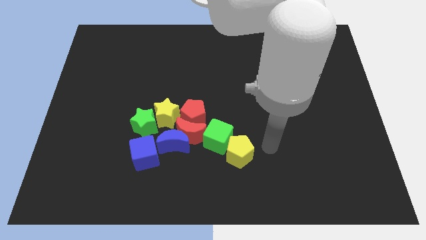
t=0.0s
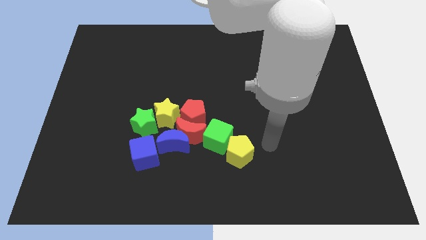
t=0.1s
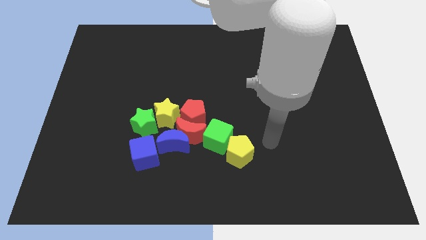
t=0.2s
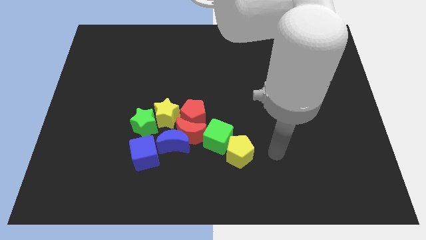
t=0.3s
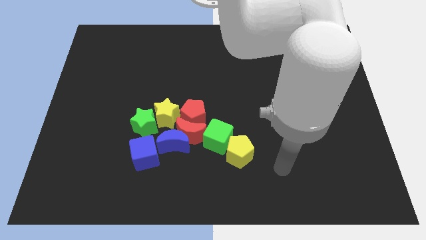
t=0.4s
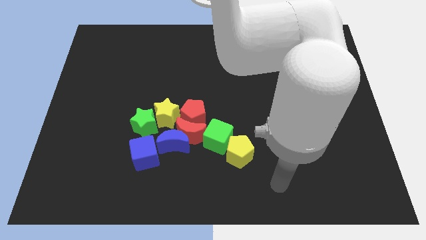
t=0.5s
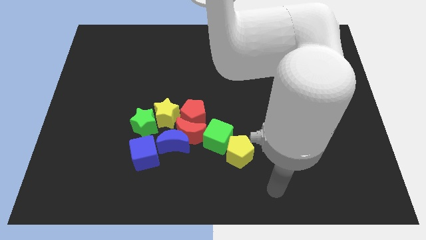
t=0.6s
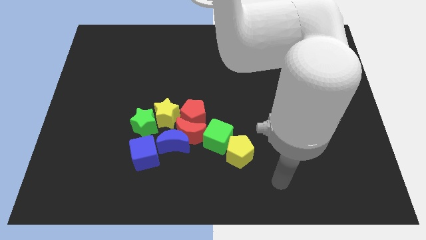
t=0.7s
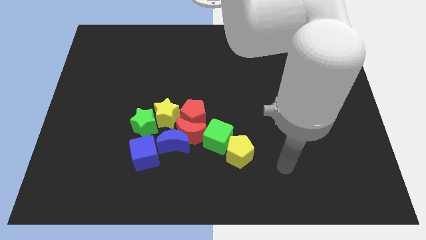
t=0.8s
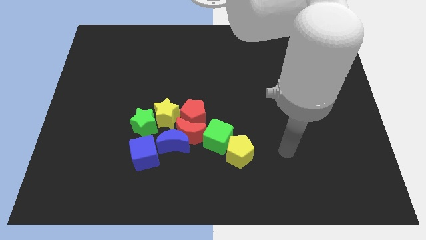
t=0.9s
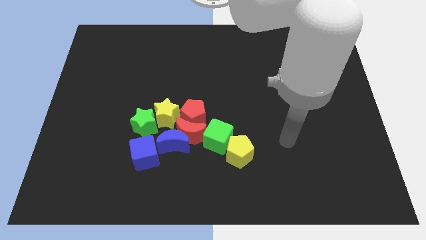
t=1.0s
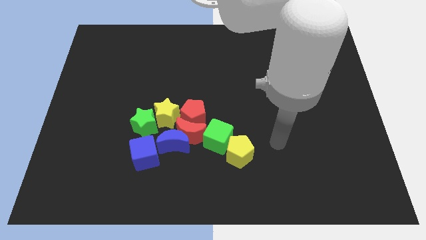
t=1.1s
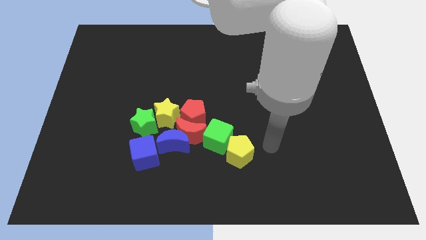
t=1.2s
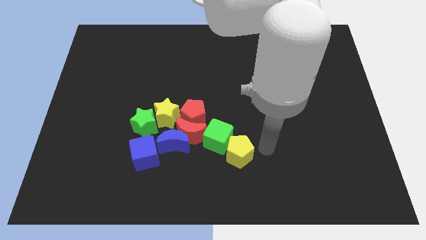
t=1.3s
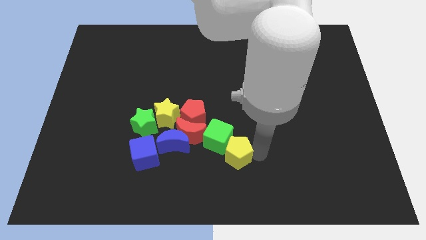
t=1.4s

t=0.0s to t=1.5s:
point your arm at the right side of the yellow pentagon

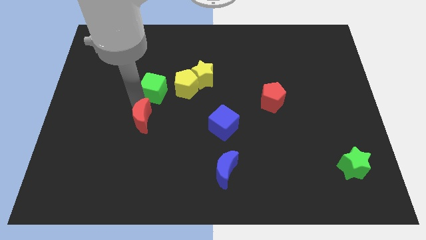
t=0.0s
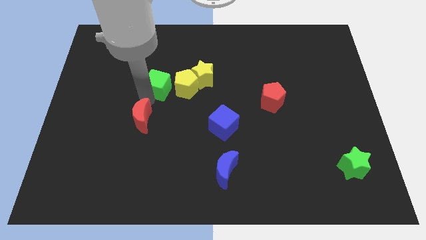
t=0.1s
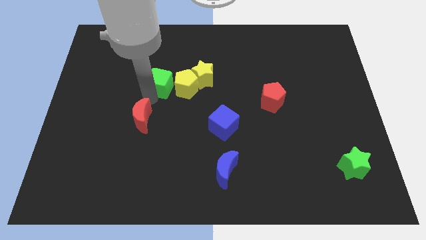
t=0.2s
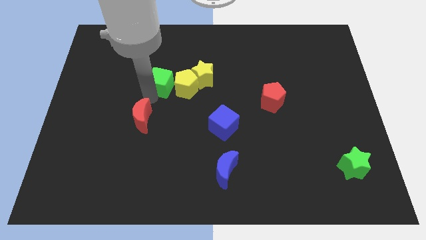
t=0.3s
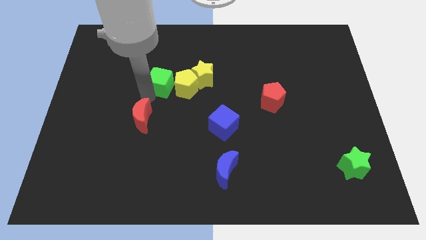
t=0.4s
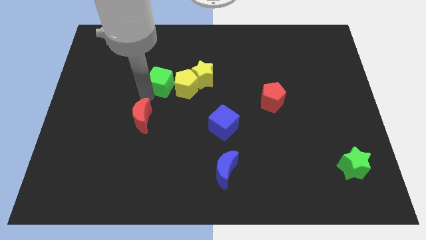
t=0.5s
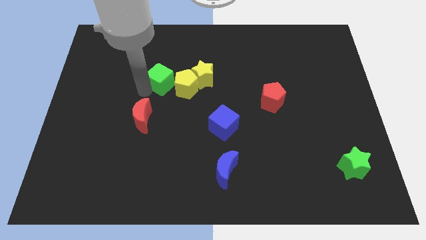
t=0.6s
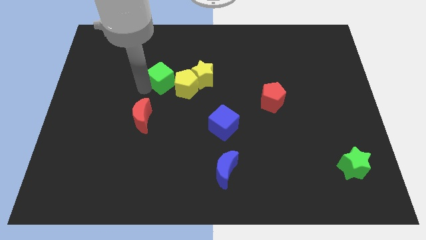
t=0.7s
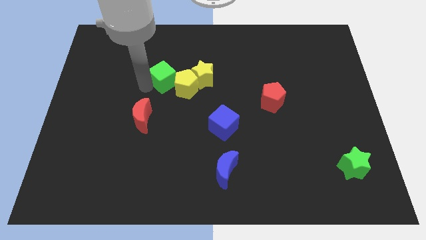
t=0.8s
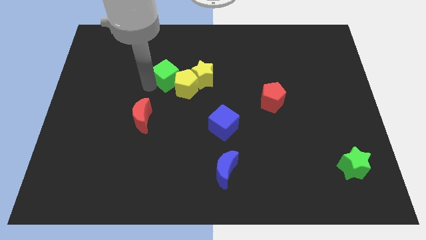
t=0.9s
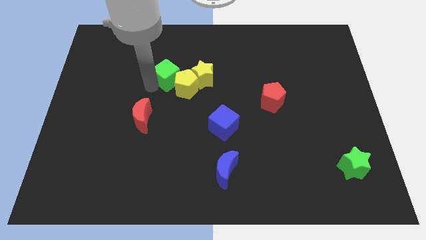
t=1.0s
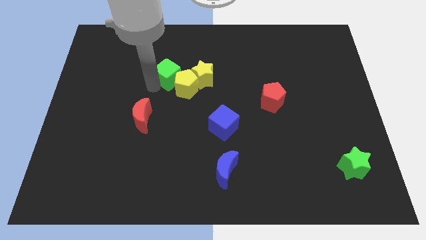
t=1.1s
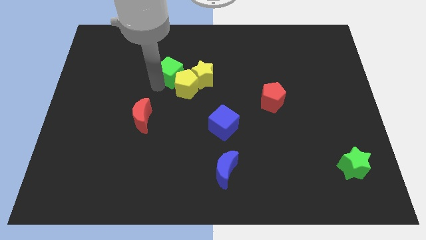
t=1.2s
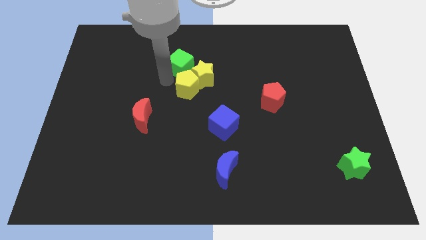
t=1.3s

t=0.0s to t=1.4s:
push the green cube into the yellow pentagon

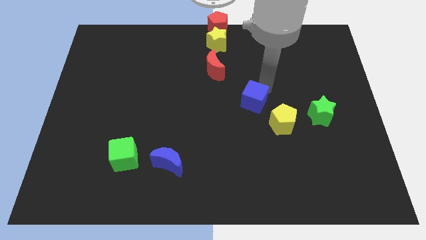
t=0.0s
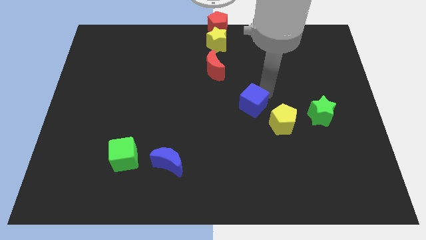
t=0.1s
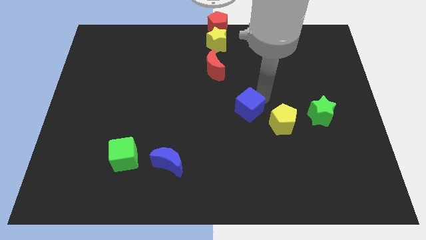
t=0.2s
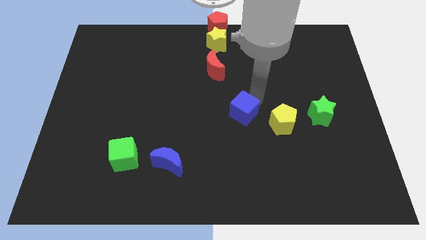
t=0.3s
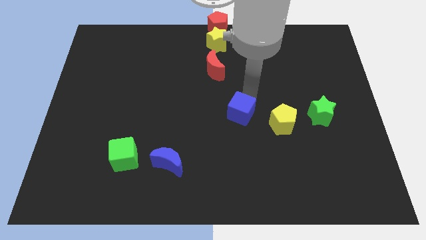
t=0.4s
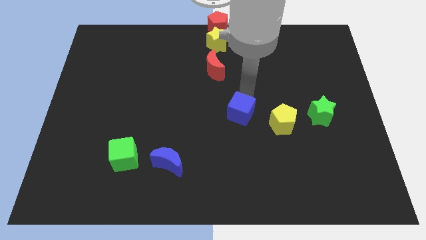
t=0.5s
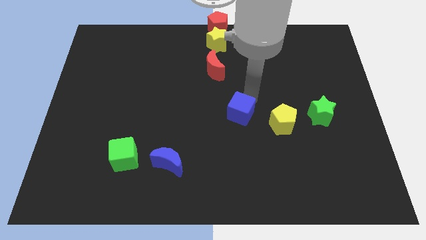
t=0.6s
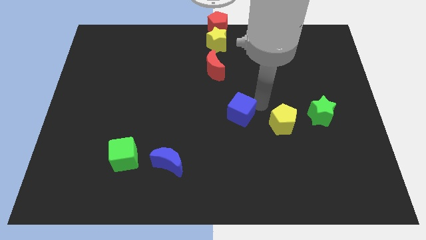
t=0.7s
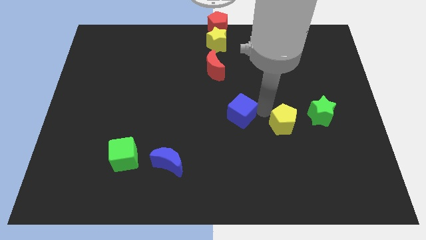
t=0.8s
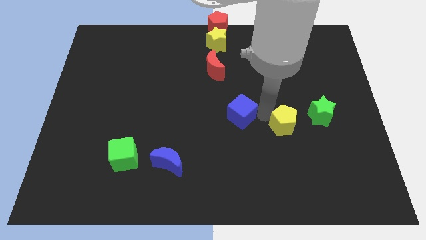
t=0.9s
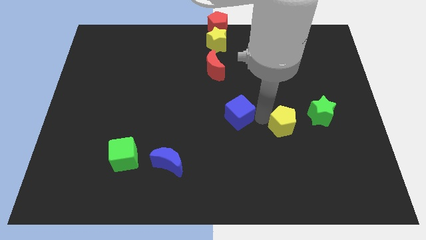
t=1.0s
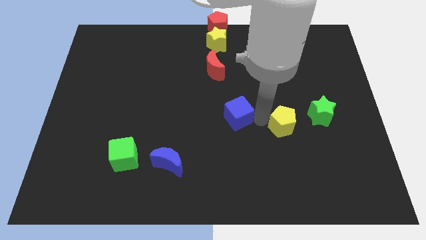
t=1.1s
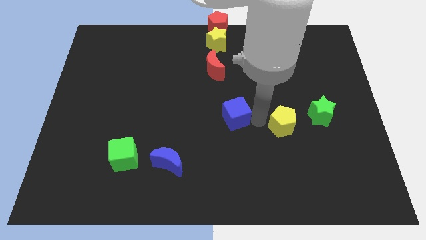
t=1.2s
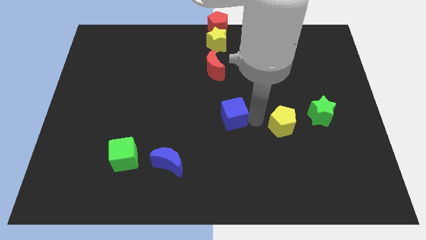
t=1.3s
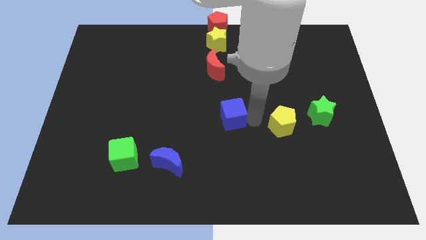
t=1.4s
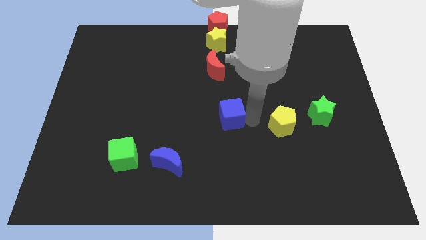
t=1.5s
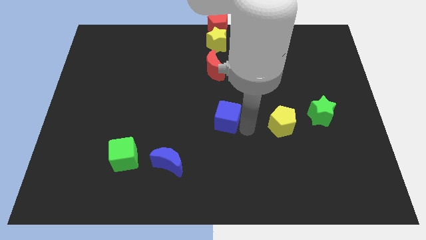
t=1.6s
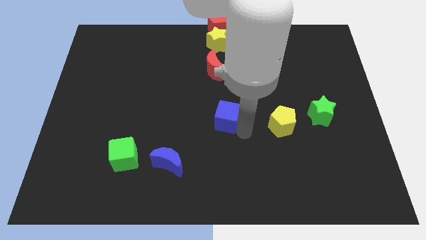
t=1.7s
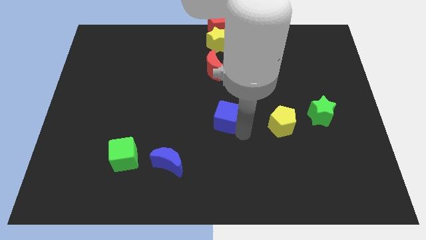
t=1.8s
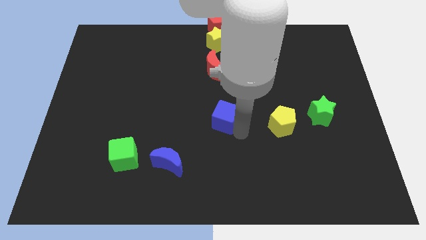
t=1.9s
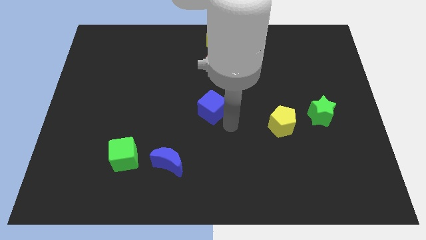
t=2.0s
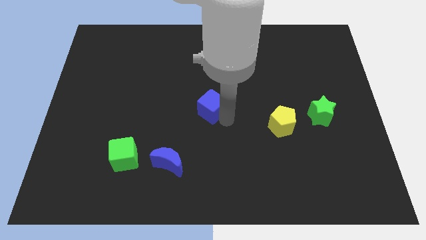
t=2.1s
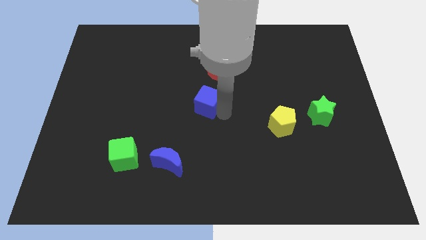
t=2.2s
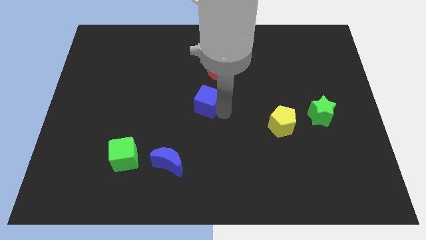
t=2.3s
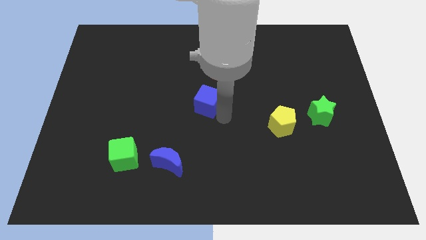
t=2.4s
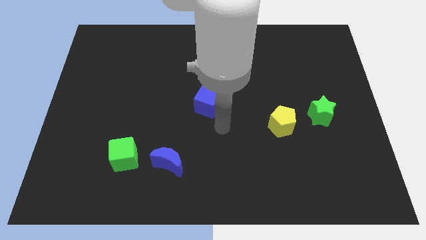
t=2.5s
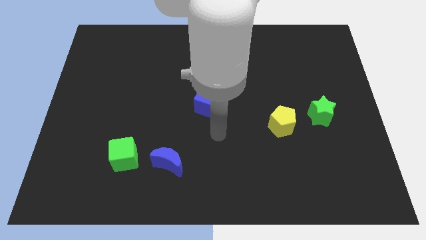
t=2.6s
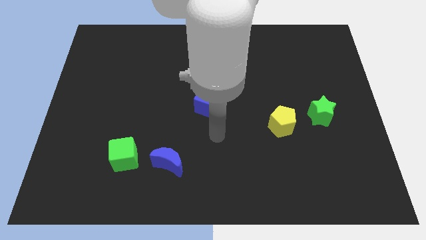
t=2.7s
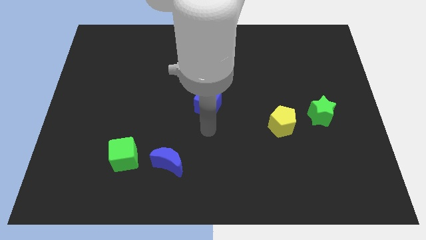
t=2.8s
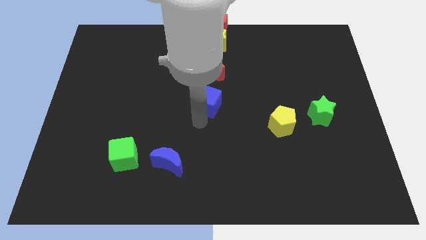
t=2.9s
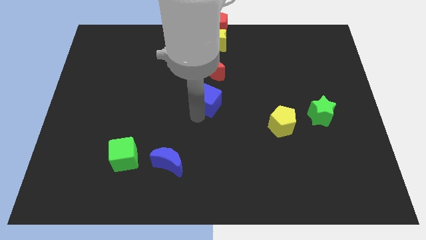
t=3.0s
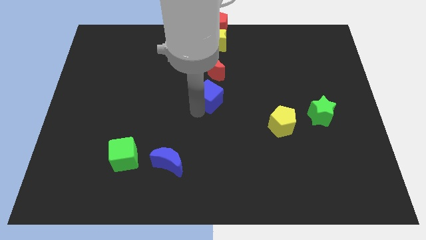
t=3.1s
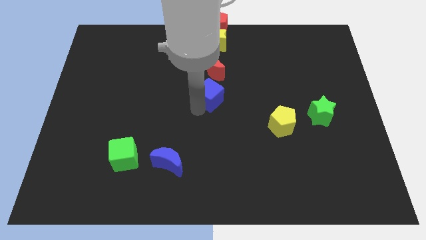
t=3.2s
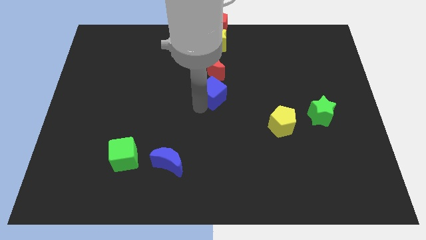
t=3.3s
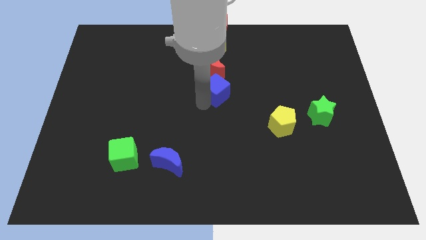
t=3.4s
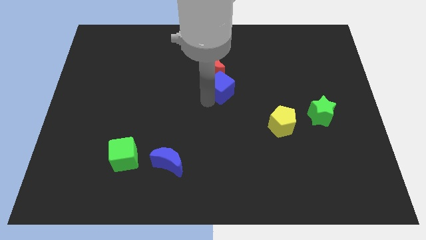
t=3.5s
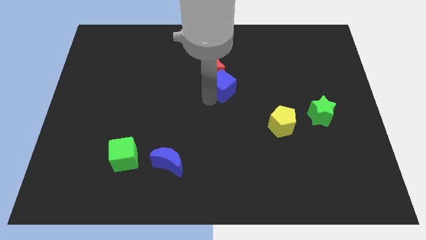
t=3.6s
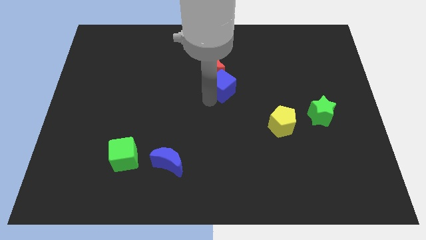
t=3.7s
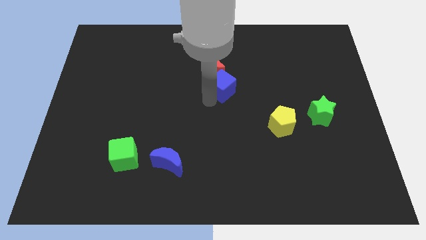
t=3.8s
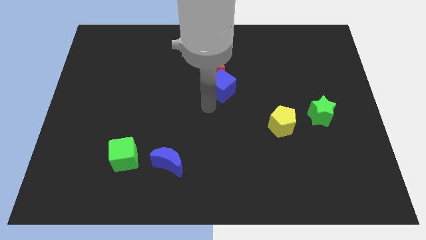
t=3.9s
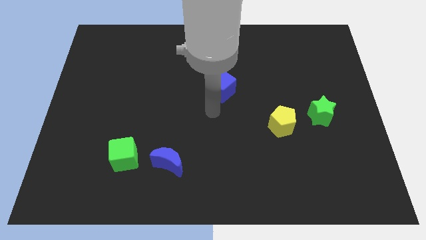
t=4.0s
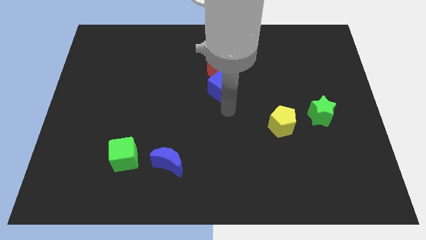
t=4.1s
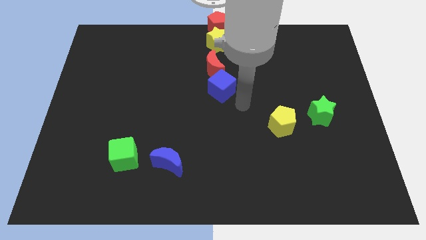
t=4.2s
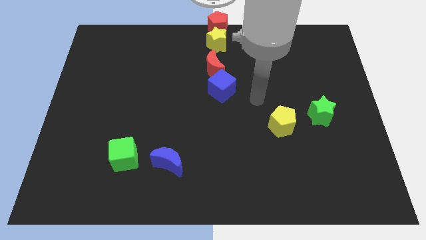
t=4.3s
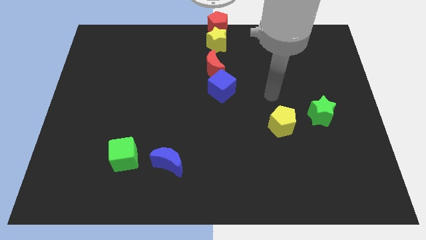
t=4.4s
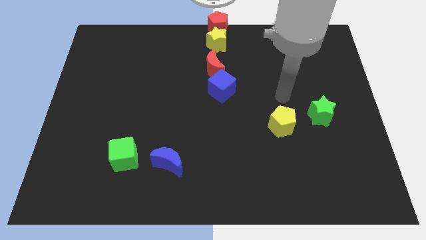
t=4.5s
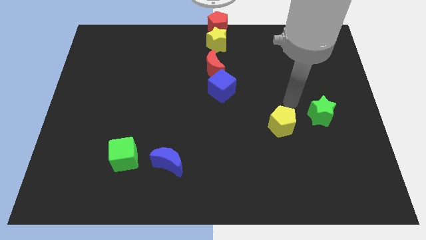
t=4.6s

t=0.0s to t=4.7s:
push the blue cube into the red crescent

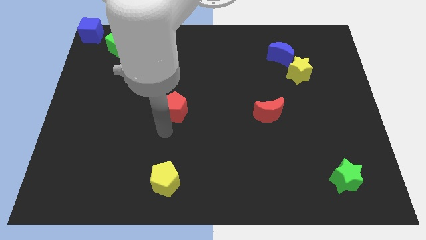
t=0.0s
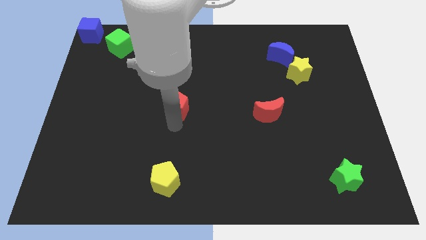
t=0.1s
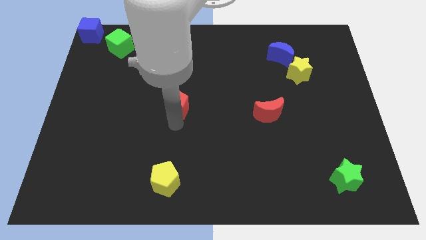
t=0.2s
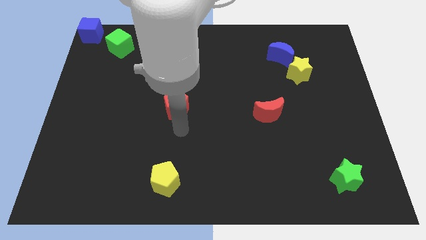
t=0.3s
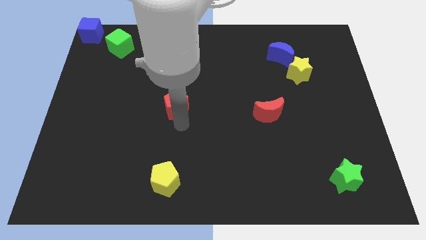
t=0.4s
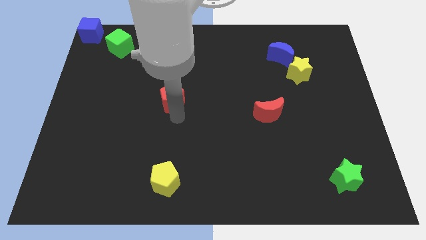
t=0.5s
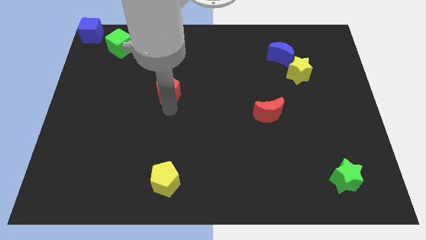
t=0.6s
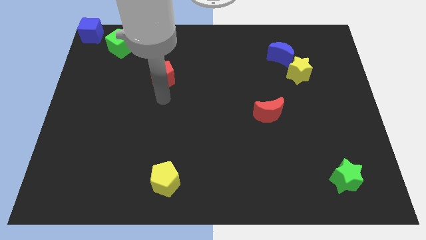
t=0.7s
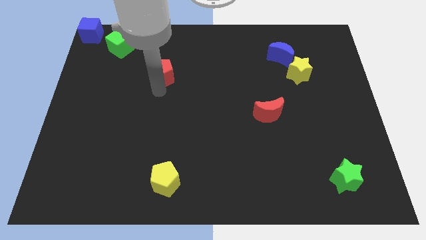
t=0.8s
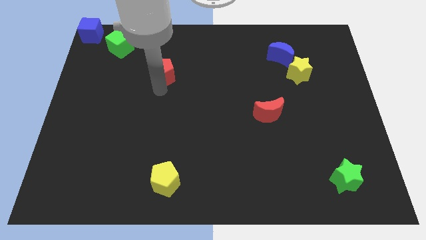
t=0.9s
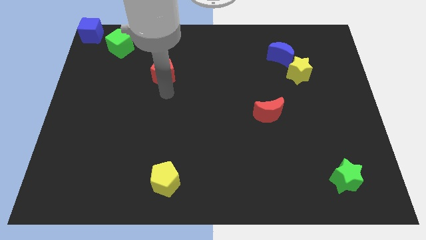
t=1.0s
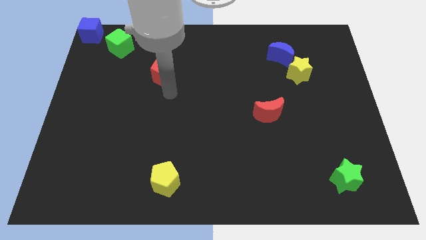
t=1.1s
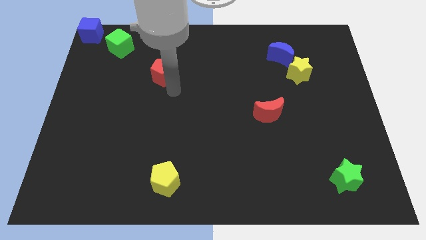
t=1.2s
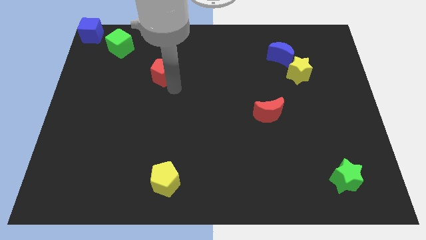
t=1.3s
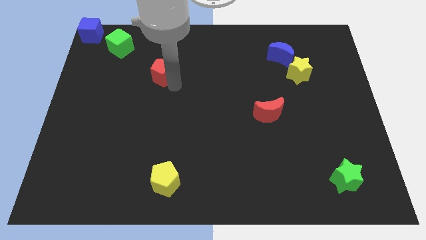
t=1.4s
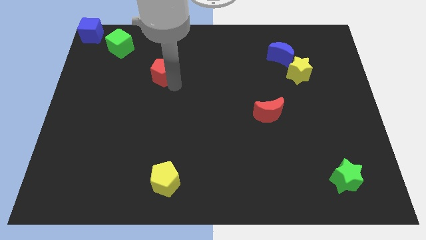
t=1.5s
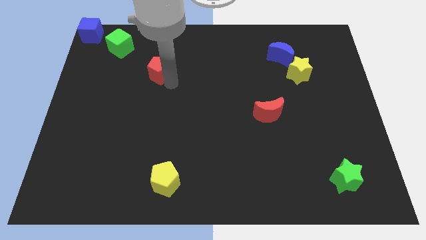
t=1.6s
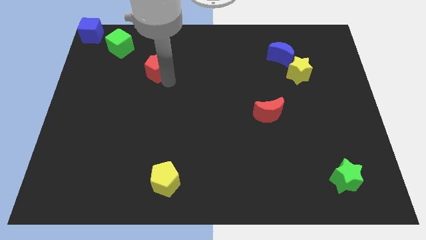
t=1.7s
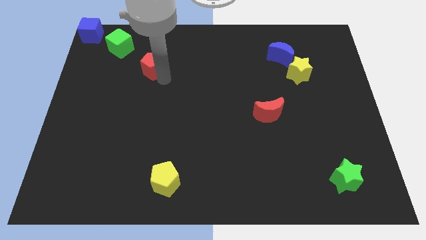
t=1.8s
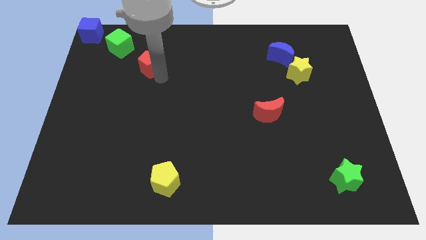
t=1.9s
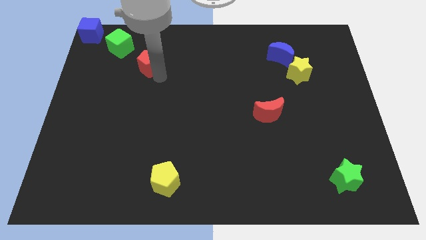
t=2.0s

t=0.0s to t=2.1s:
place the red pentagon diagonal to the green cube
